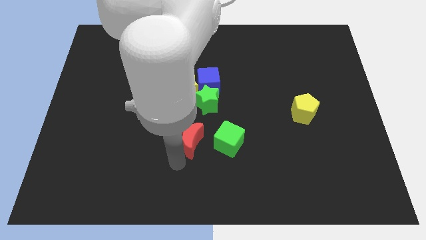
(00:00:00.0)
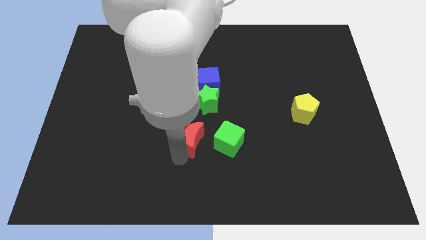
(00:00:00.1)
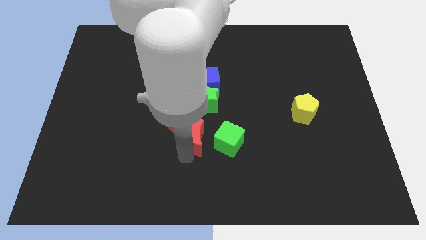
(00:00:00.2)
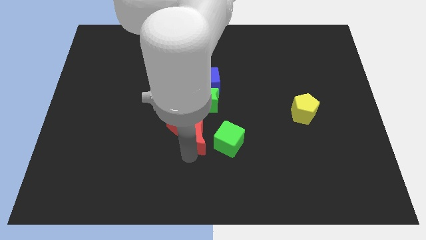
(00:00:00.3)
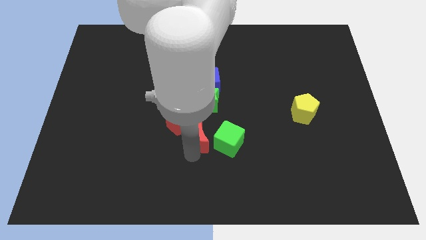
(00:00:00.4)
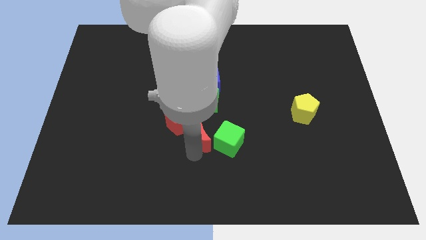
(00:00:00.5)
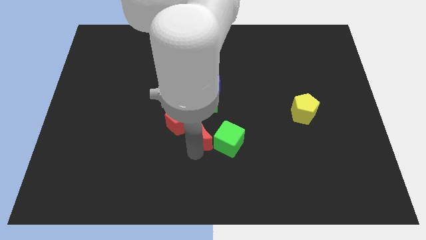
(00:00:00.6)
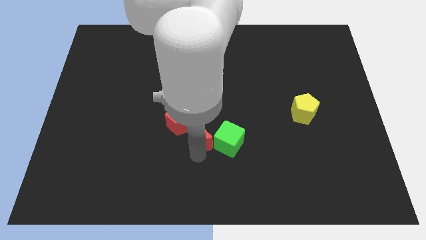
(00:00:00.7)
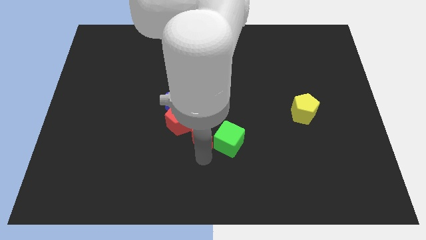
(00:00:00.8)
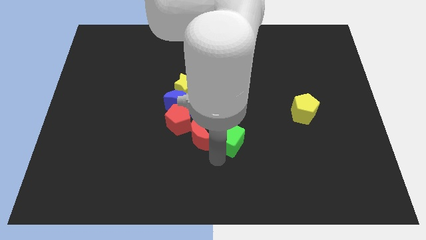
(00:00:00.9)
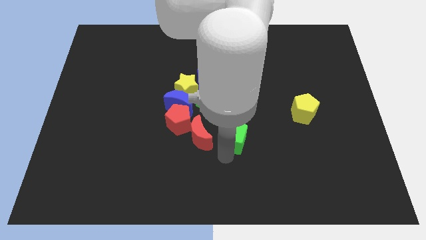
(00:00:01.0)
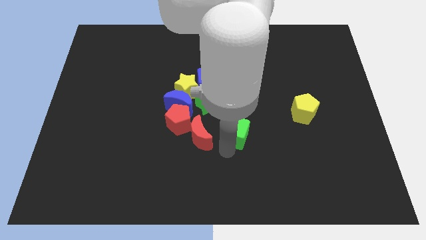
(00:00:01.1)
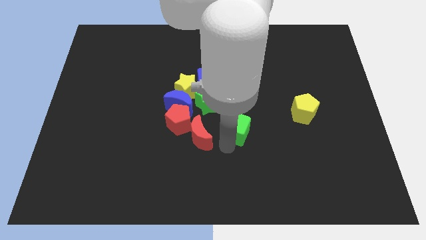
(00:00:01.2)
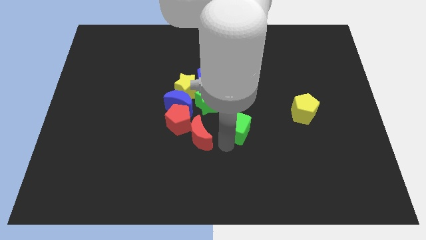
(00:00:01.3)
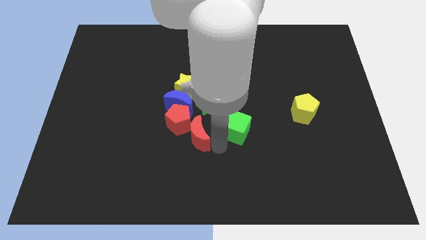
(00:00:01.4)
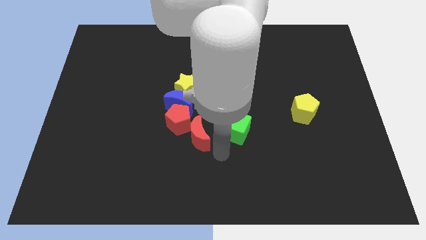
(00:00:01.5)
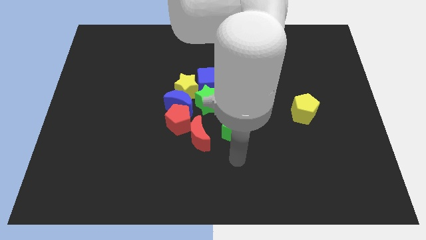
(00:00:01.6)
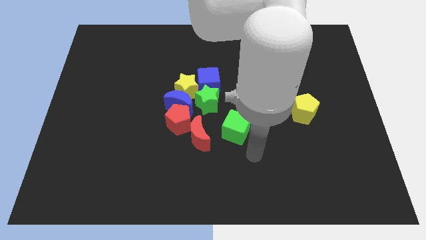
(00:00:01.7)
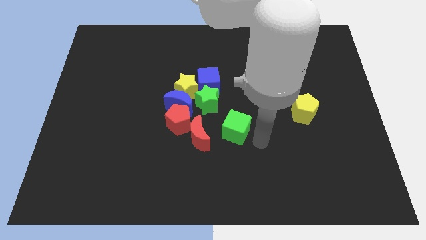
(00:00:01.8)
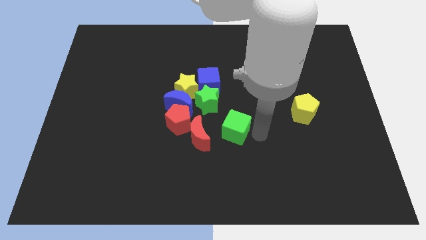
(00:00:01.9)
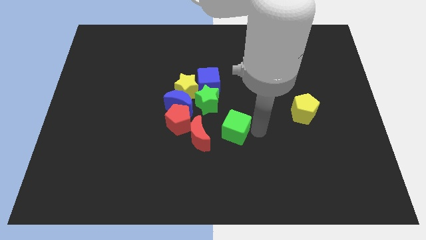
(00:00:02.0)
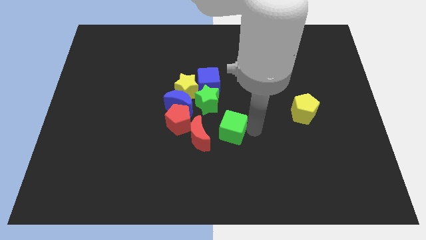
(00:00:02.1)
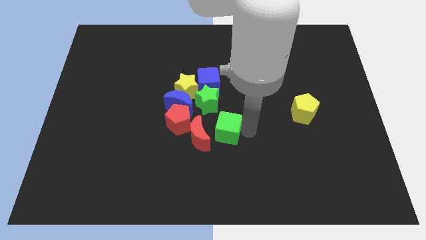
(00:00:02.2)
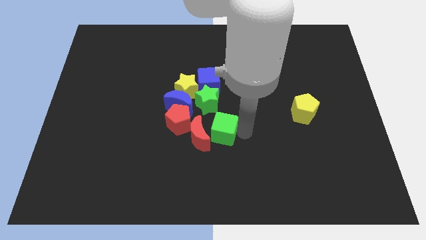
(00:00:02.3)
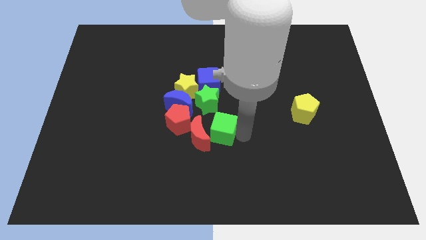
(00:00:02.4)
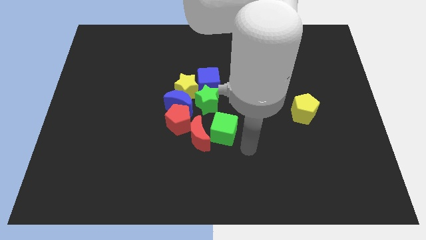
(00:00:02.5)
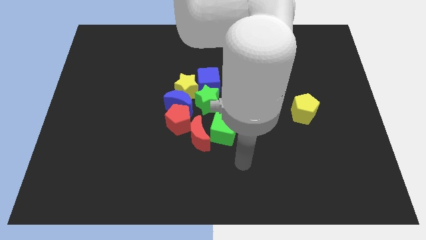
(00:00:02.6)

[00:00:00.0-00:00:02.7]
move your arm away from the red moon

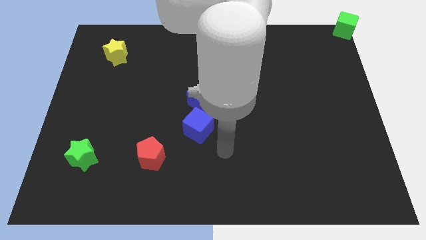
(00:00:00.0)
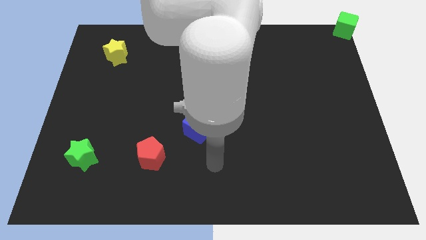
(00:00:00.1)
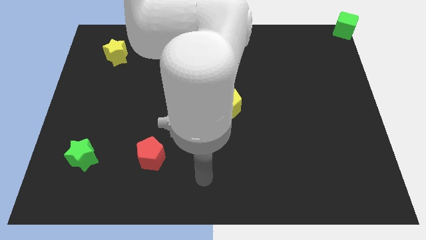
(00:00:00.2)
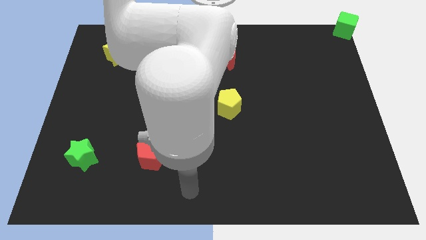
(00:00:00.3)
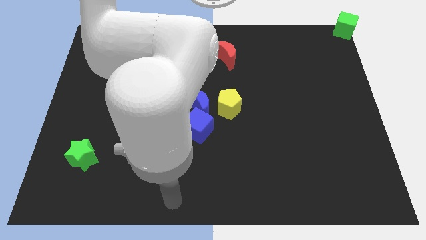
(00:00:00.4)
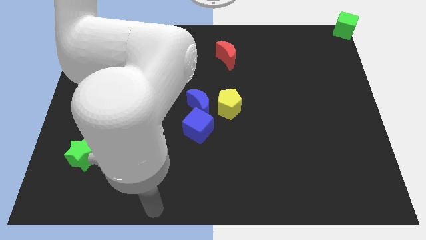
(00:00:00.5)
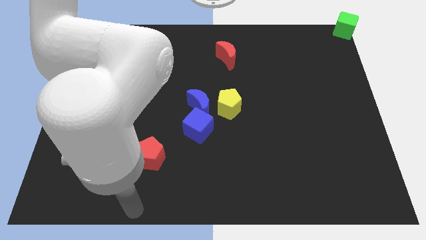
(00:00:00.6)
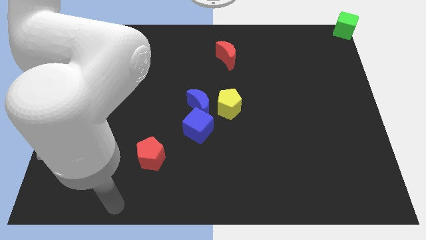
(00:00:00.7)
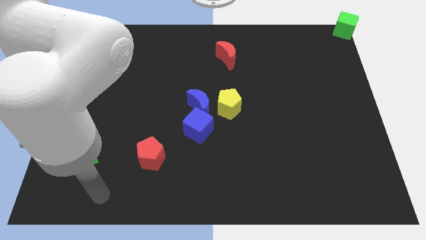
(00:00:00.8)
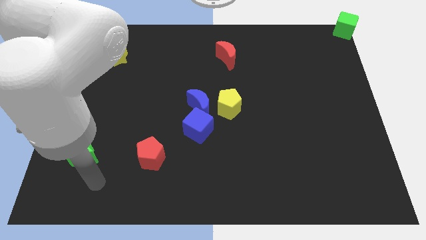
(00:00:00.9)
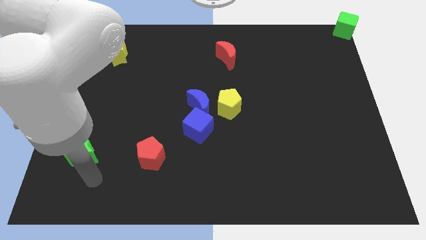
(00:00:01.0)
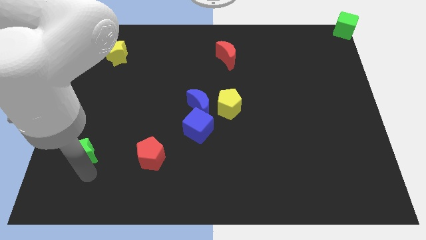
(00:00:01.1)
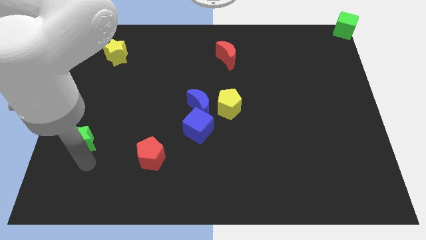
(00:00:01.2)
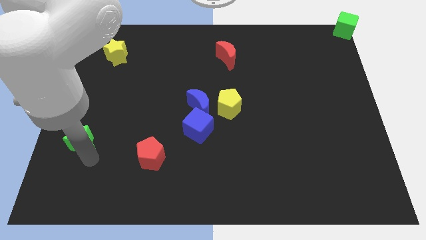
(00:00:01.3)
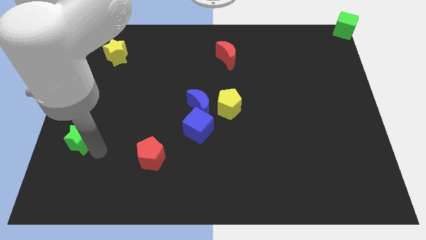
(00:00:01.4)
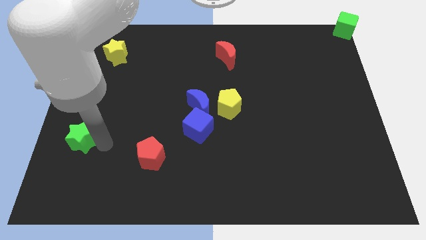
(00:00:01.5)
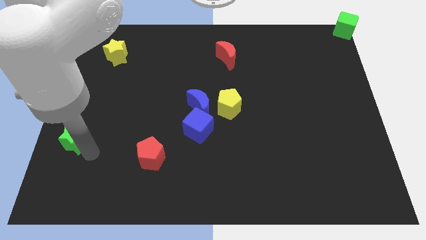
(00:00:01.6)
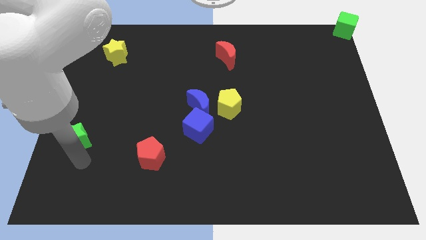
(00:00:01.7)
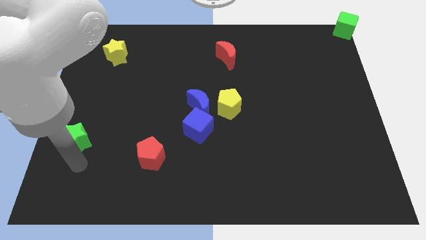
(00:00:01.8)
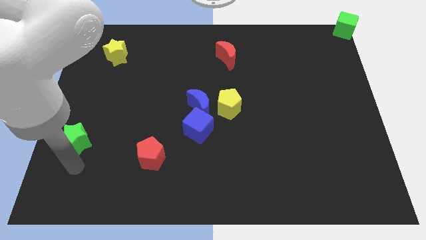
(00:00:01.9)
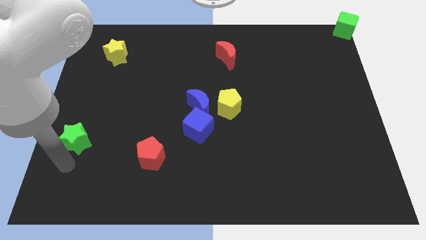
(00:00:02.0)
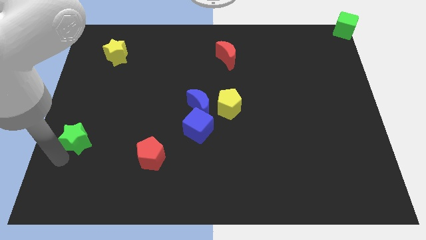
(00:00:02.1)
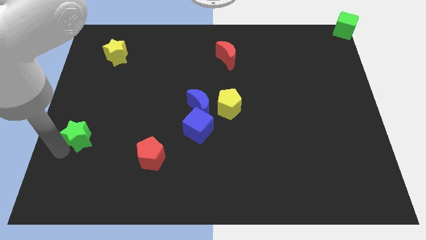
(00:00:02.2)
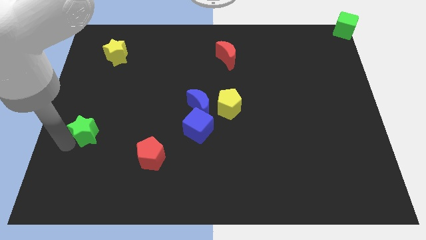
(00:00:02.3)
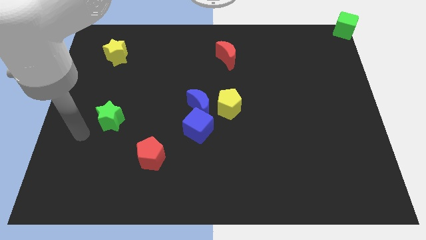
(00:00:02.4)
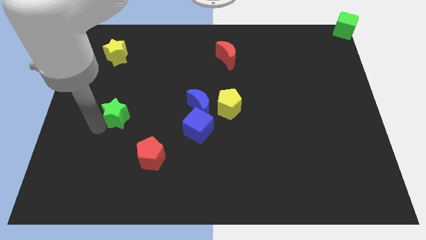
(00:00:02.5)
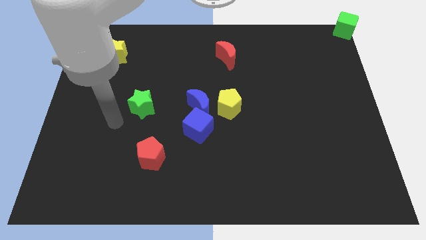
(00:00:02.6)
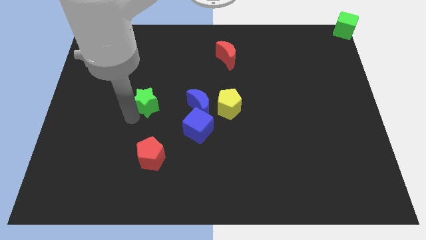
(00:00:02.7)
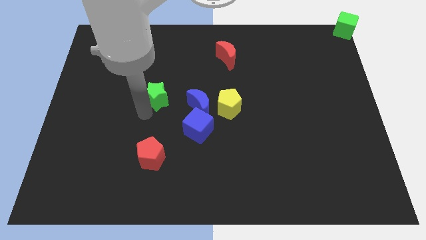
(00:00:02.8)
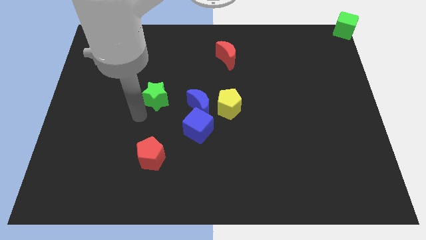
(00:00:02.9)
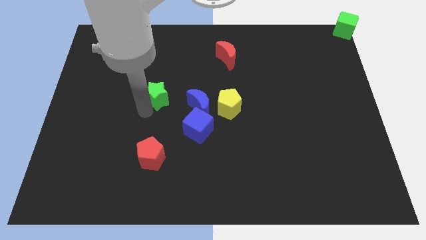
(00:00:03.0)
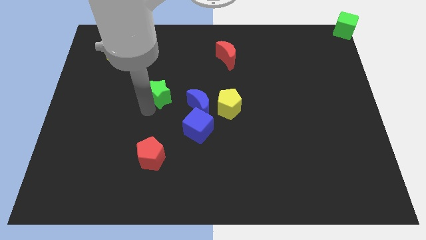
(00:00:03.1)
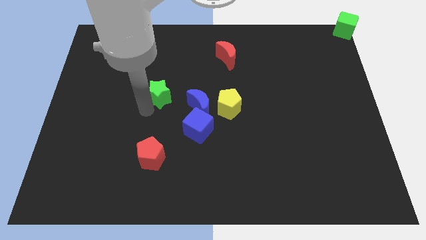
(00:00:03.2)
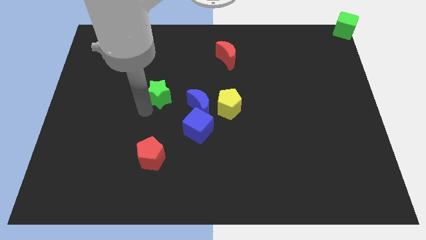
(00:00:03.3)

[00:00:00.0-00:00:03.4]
push green star upwards

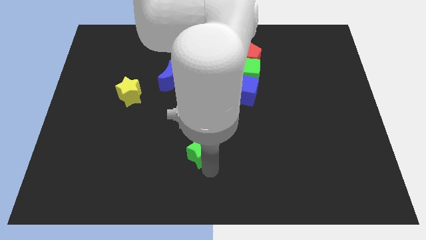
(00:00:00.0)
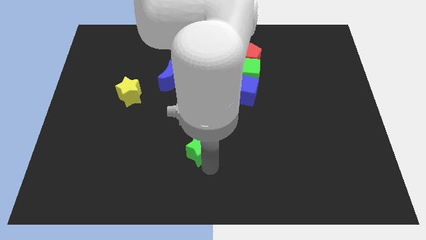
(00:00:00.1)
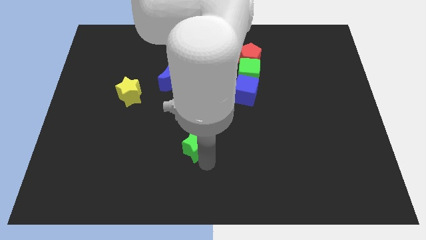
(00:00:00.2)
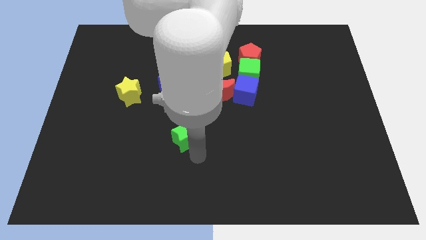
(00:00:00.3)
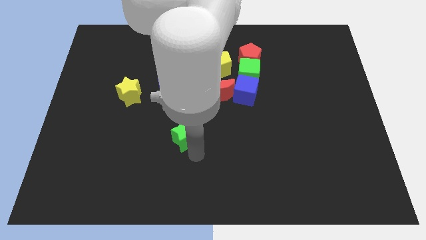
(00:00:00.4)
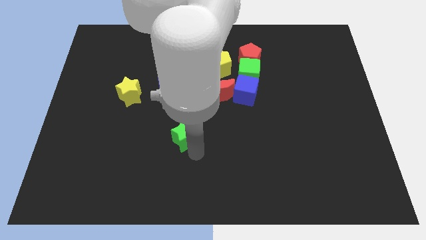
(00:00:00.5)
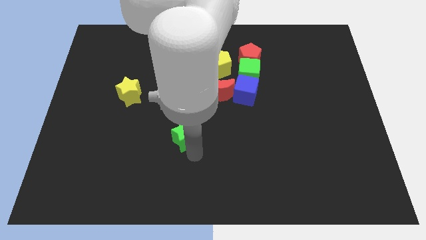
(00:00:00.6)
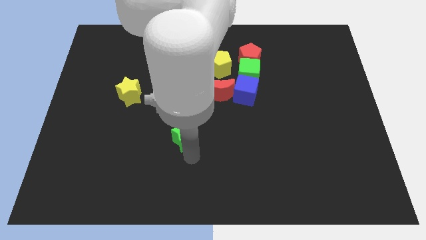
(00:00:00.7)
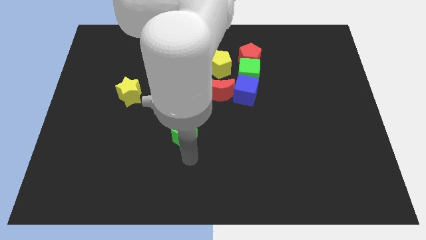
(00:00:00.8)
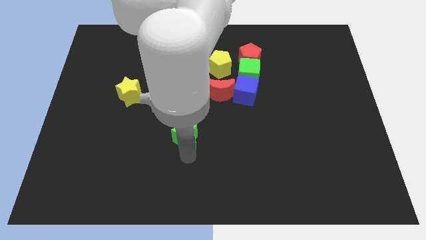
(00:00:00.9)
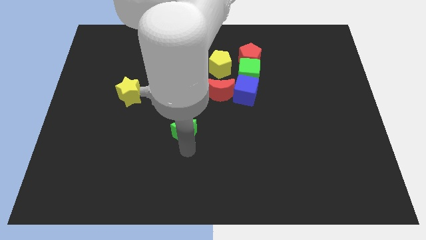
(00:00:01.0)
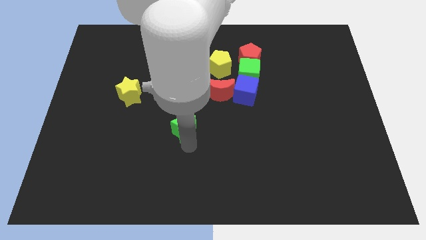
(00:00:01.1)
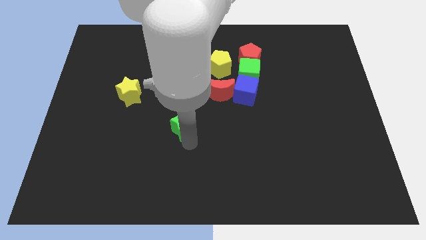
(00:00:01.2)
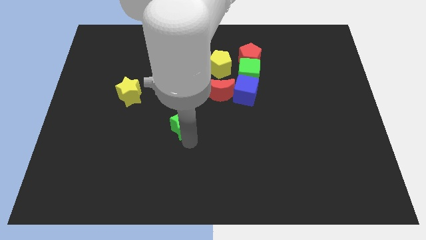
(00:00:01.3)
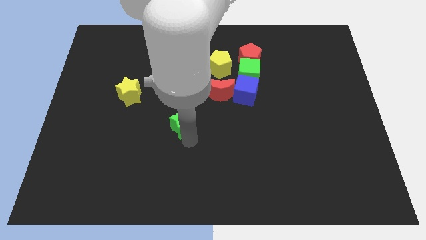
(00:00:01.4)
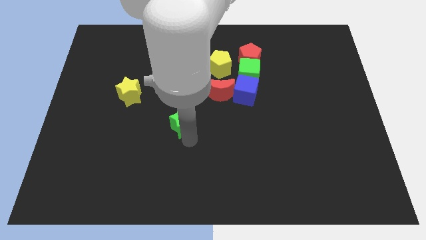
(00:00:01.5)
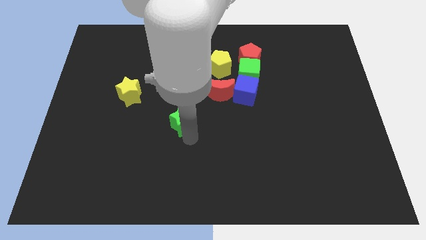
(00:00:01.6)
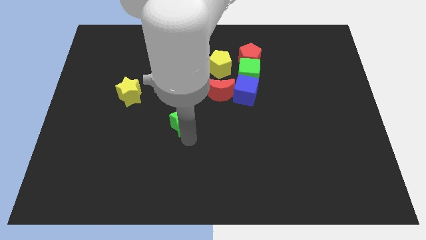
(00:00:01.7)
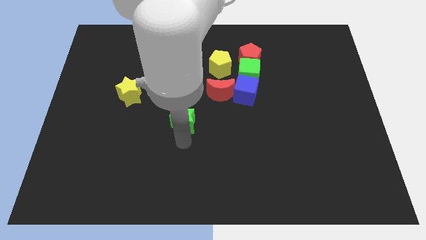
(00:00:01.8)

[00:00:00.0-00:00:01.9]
move the green star below the blue moon

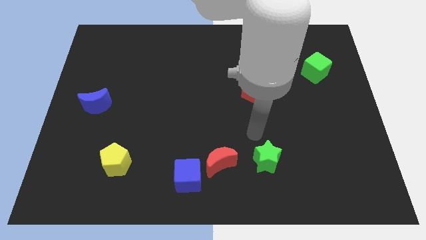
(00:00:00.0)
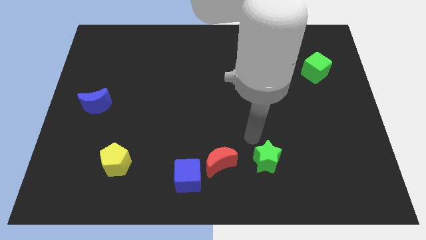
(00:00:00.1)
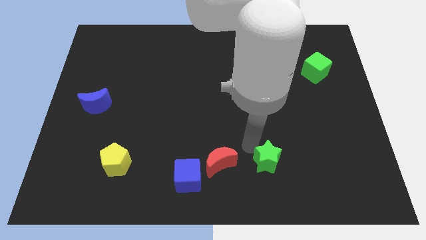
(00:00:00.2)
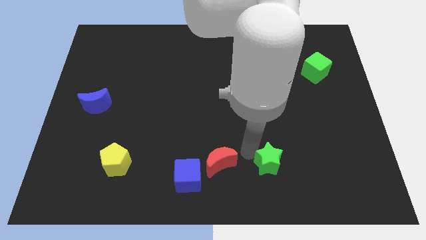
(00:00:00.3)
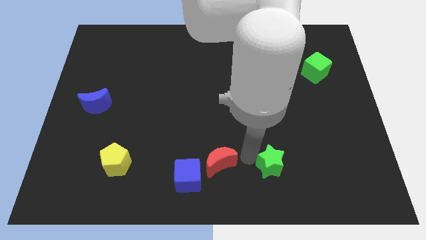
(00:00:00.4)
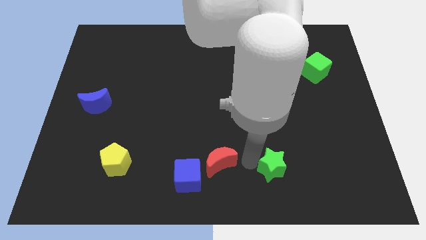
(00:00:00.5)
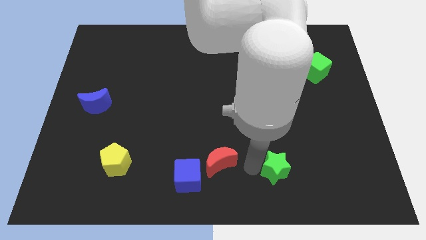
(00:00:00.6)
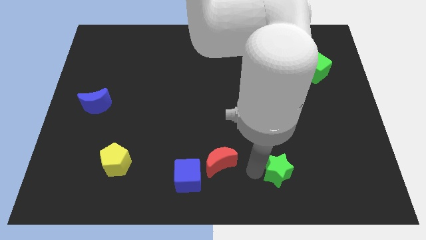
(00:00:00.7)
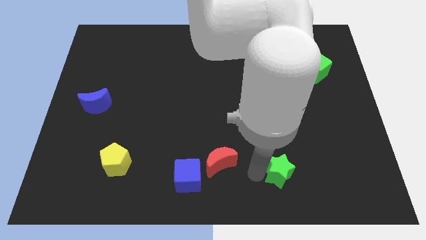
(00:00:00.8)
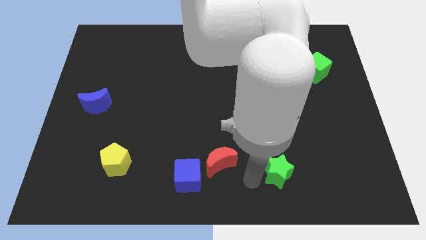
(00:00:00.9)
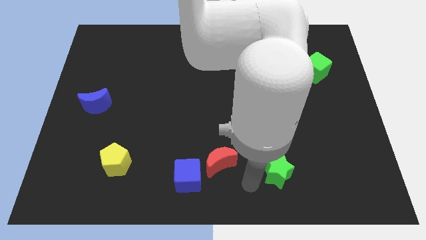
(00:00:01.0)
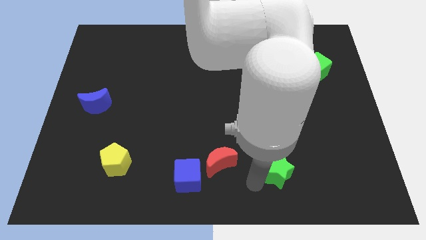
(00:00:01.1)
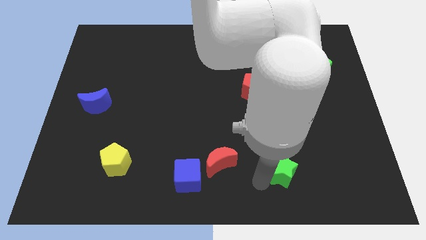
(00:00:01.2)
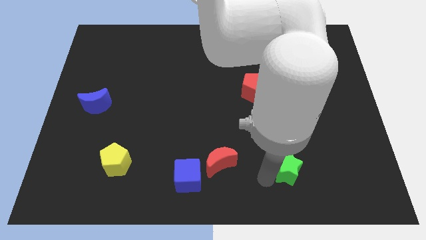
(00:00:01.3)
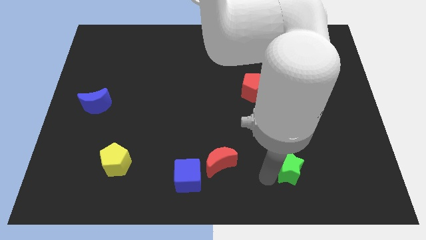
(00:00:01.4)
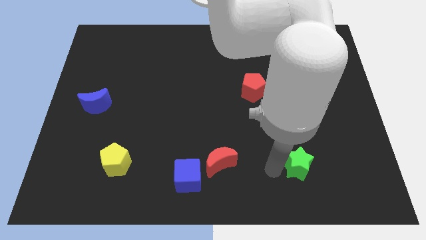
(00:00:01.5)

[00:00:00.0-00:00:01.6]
move the green star slightly to the right side of the board
